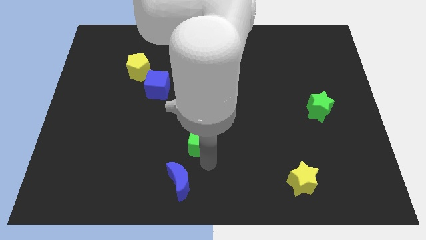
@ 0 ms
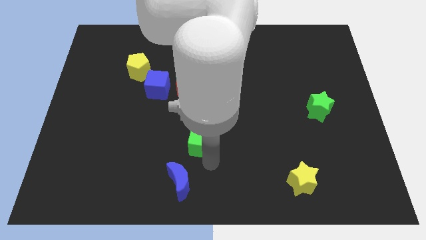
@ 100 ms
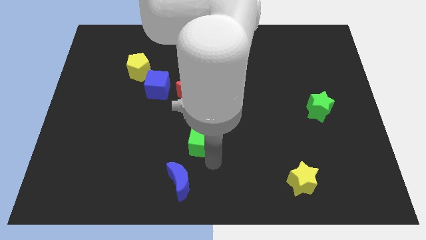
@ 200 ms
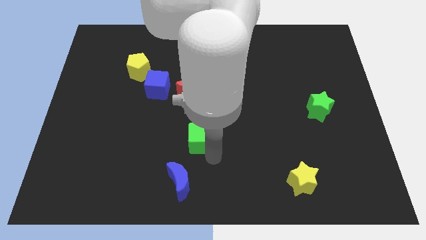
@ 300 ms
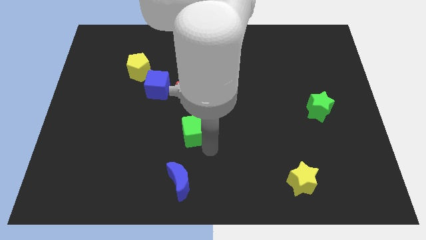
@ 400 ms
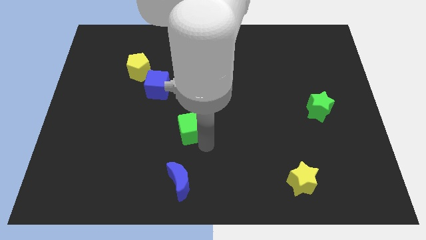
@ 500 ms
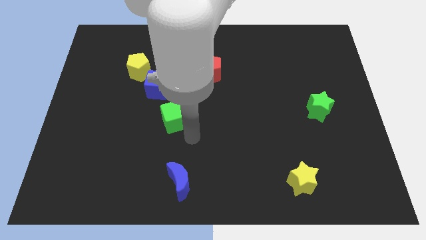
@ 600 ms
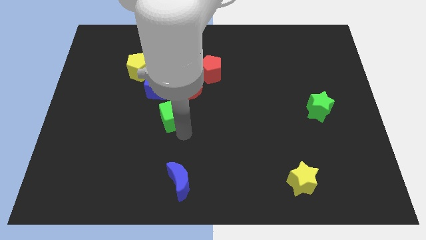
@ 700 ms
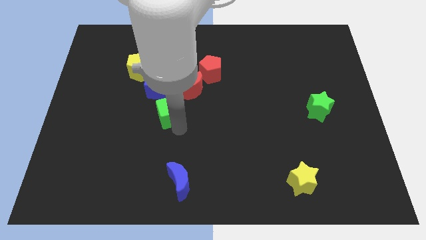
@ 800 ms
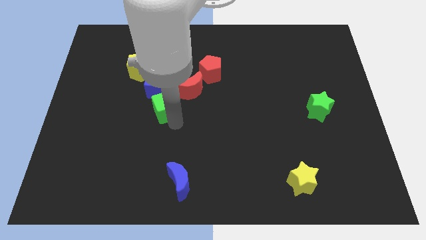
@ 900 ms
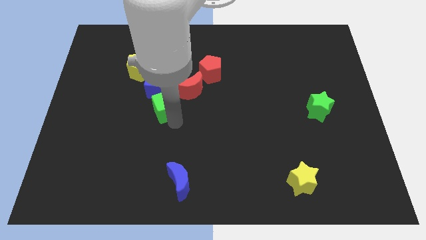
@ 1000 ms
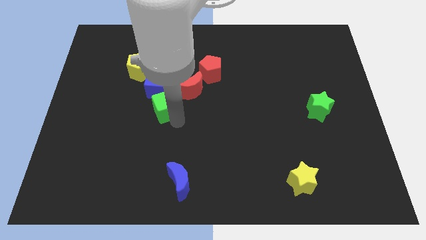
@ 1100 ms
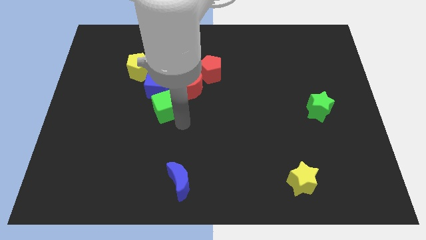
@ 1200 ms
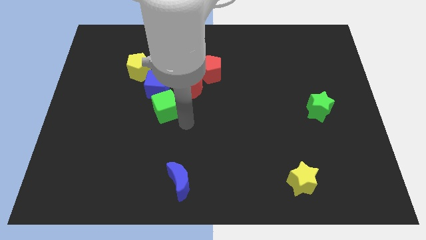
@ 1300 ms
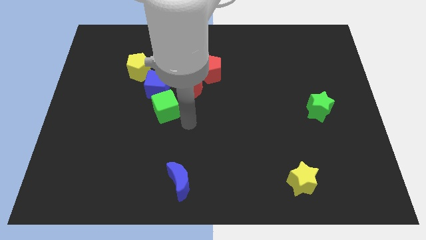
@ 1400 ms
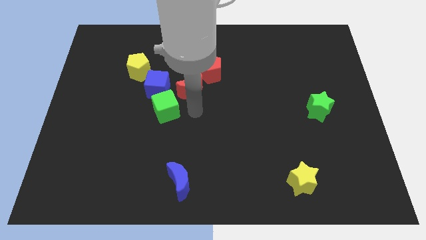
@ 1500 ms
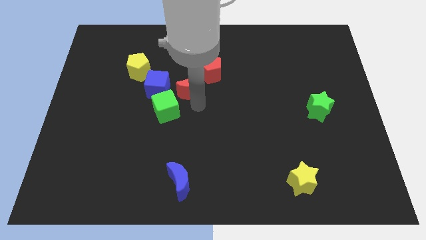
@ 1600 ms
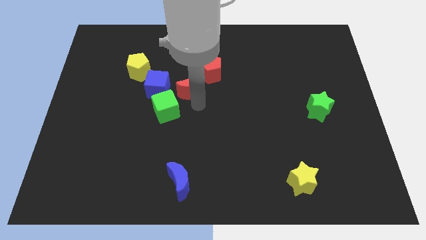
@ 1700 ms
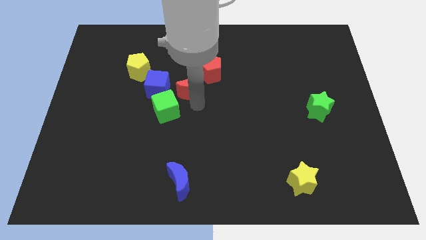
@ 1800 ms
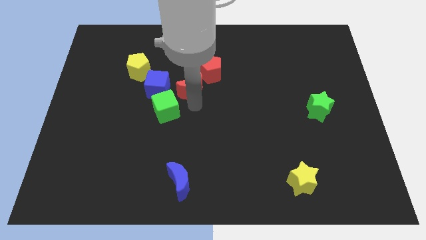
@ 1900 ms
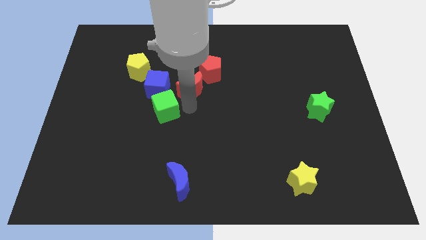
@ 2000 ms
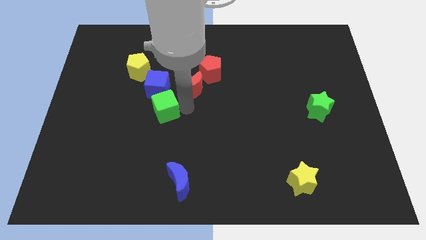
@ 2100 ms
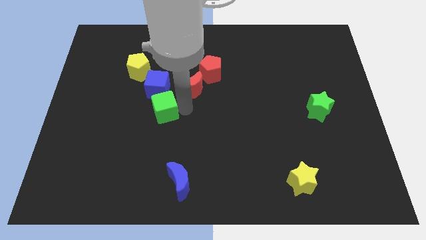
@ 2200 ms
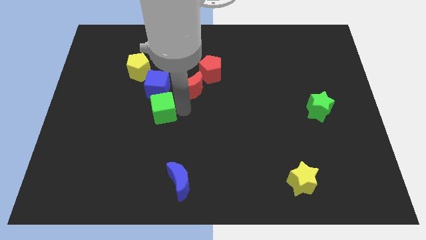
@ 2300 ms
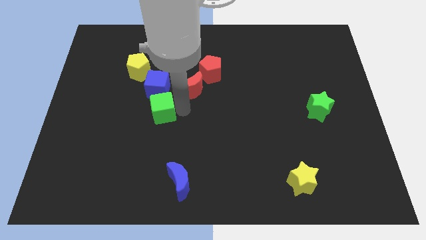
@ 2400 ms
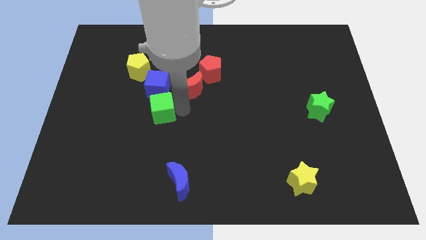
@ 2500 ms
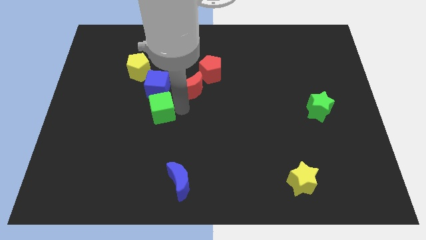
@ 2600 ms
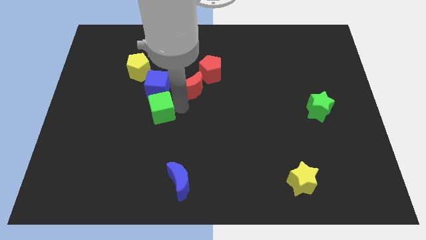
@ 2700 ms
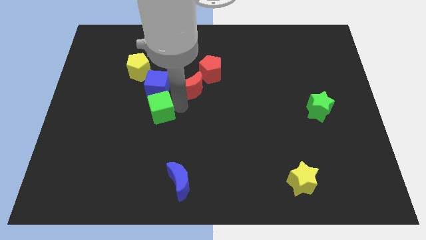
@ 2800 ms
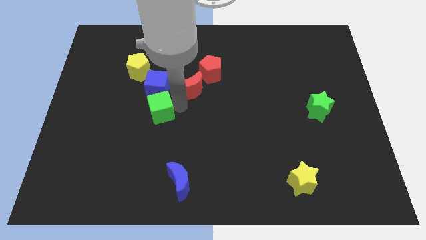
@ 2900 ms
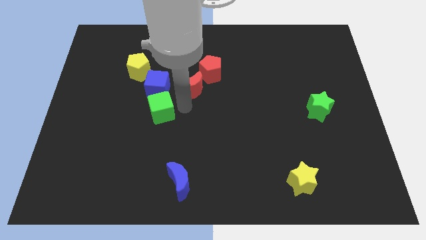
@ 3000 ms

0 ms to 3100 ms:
push the green cube into the blue cube

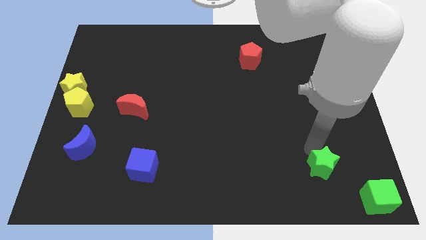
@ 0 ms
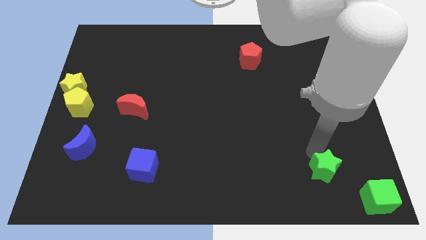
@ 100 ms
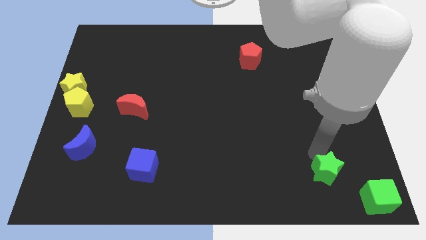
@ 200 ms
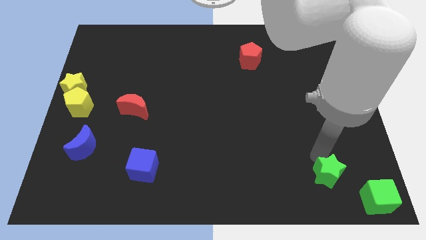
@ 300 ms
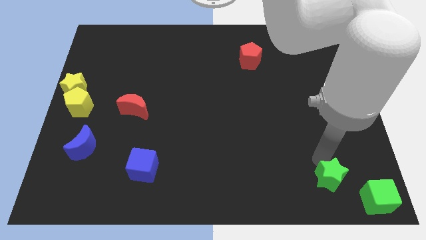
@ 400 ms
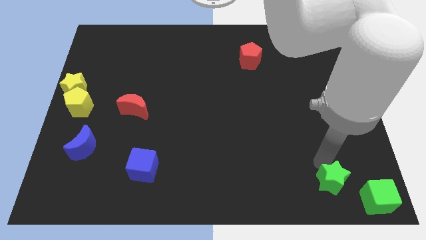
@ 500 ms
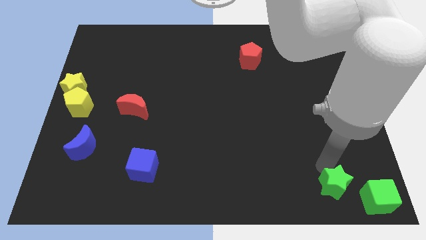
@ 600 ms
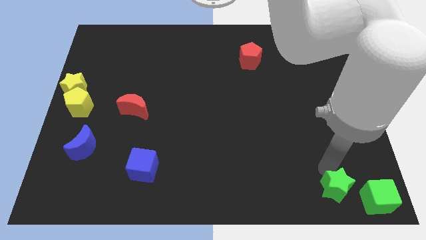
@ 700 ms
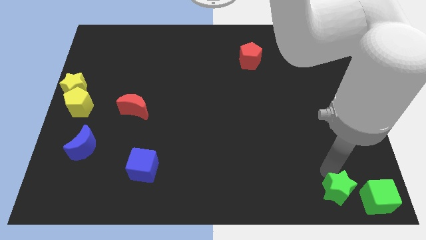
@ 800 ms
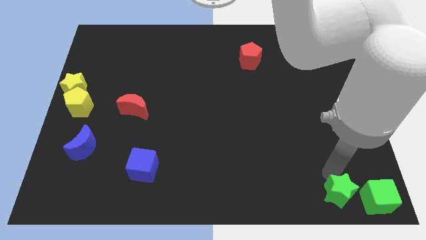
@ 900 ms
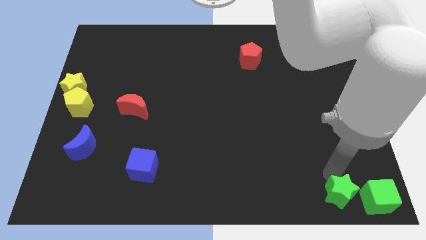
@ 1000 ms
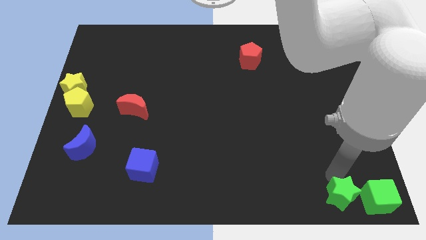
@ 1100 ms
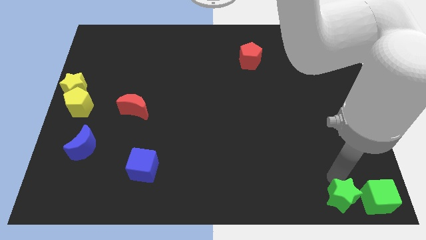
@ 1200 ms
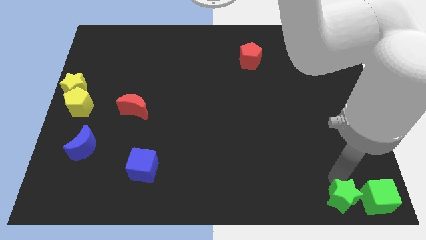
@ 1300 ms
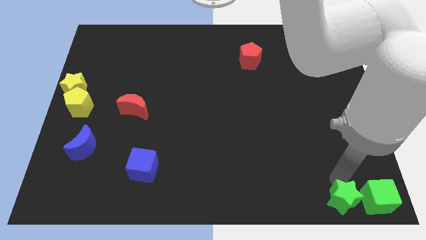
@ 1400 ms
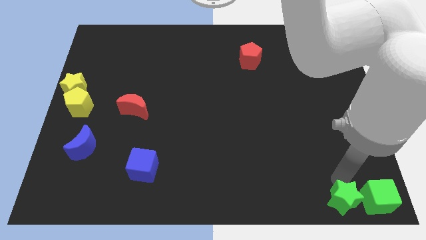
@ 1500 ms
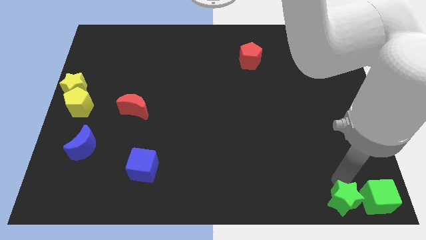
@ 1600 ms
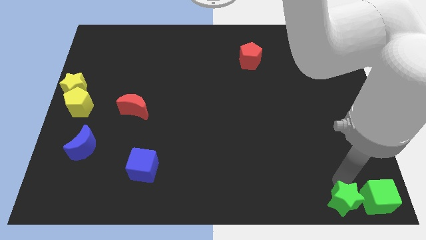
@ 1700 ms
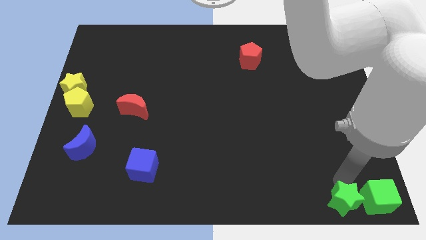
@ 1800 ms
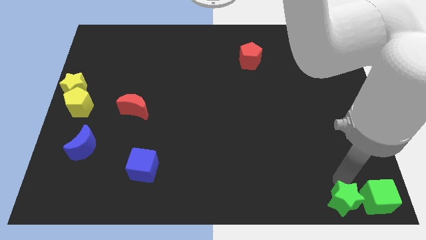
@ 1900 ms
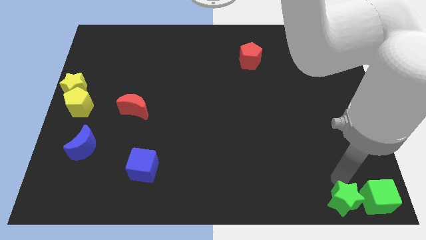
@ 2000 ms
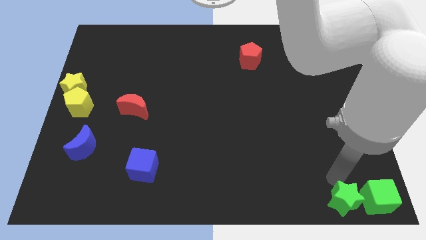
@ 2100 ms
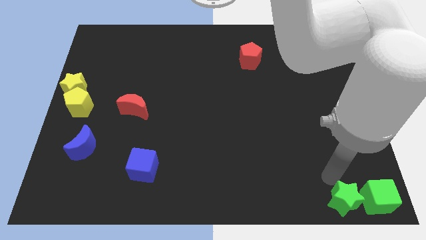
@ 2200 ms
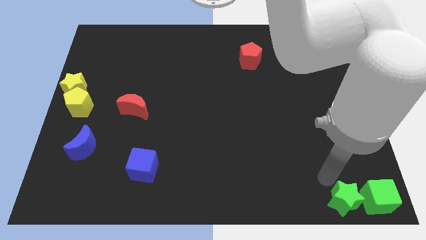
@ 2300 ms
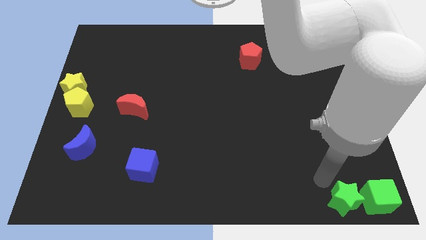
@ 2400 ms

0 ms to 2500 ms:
place the green star to the left of the green cube

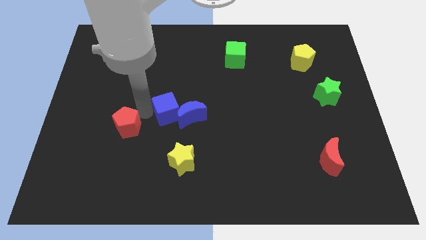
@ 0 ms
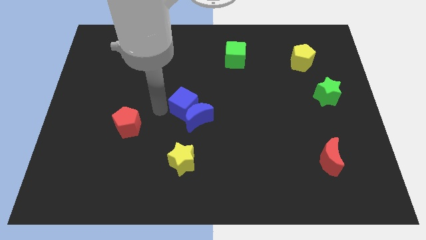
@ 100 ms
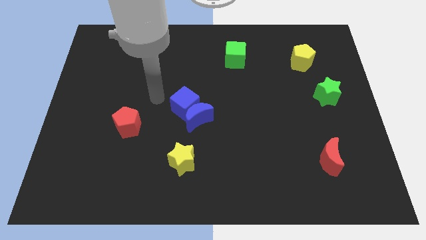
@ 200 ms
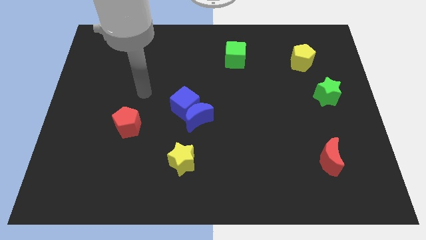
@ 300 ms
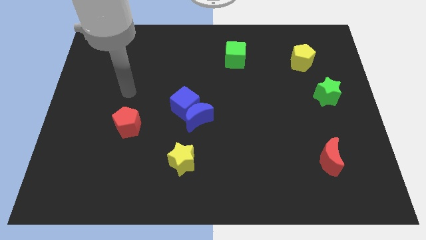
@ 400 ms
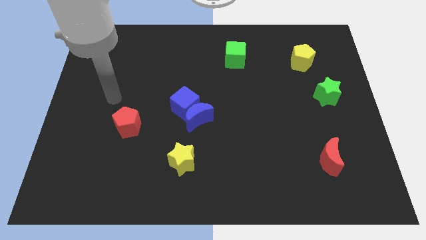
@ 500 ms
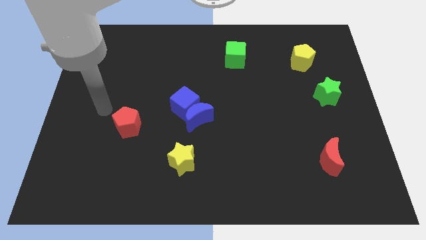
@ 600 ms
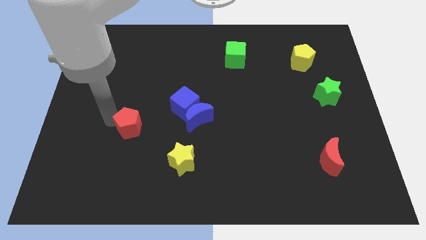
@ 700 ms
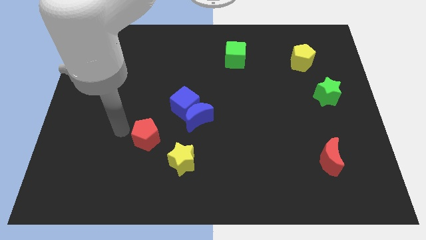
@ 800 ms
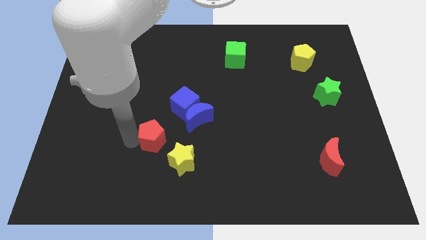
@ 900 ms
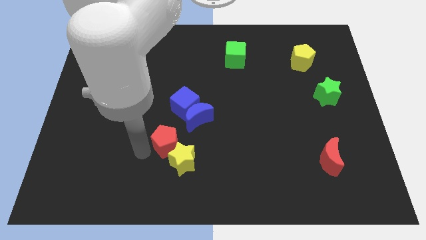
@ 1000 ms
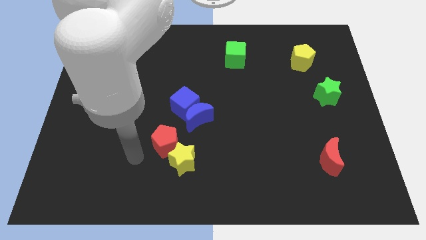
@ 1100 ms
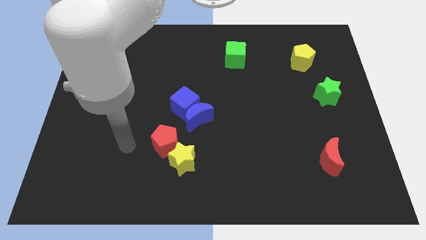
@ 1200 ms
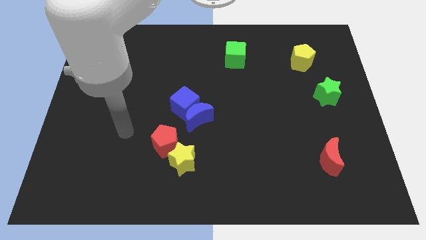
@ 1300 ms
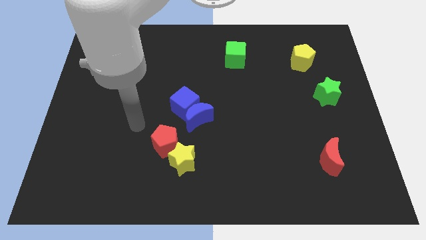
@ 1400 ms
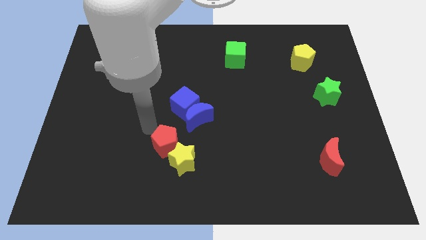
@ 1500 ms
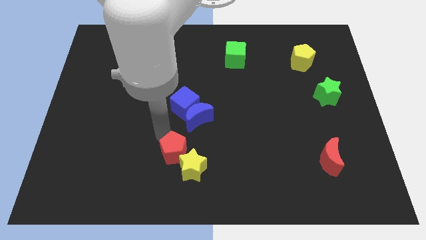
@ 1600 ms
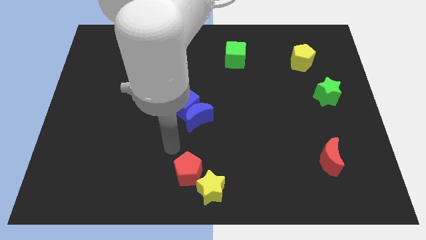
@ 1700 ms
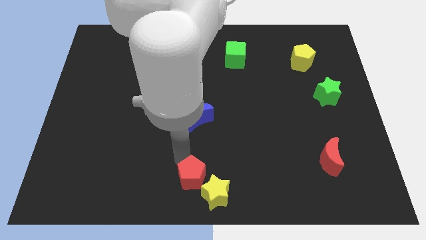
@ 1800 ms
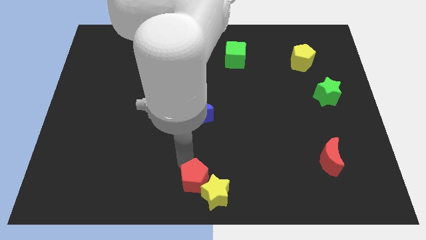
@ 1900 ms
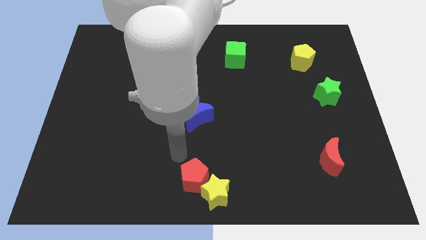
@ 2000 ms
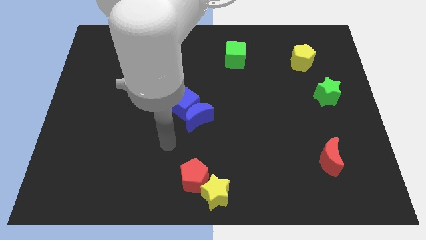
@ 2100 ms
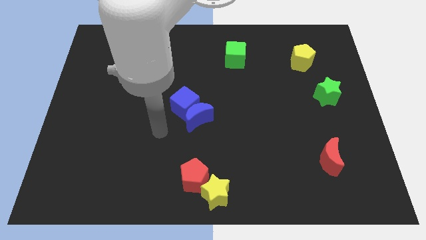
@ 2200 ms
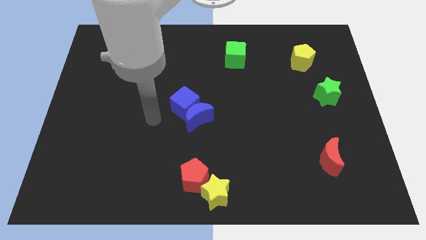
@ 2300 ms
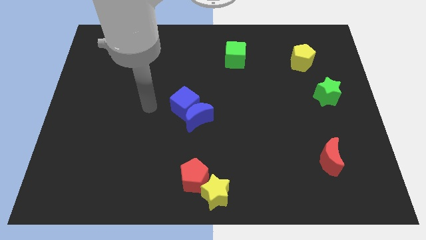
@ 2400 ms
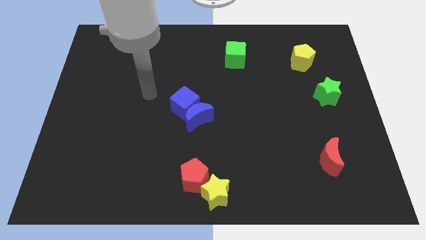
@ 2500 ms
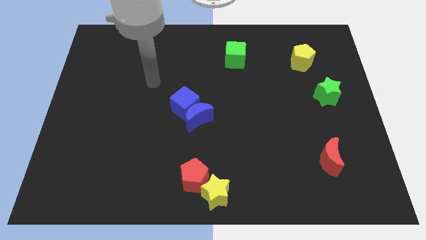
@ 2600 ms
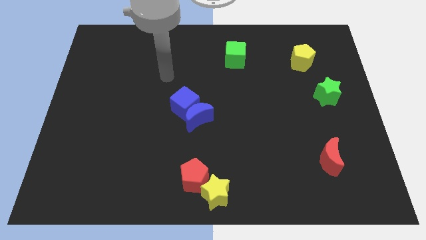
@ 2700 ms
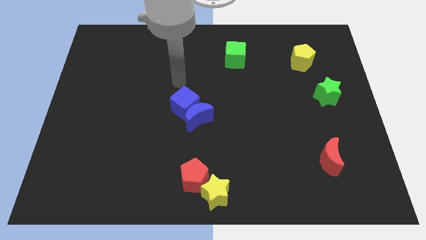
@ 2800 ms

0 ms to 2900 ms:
push the yellow star and red pentagon towards the bottom center

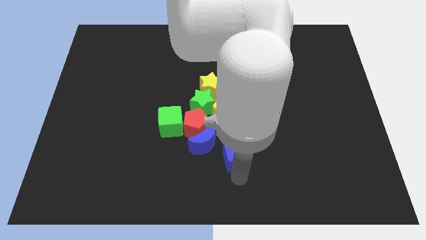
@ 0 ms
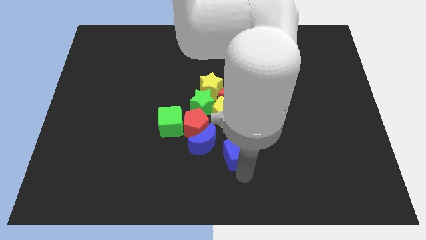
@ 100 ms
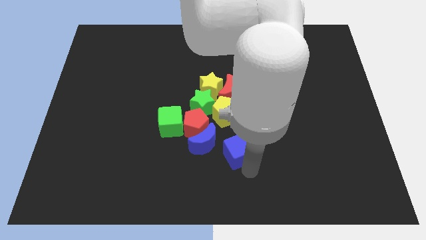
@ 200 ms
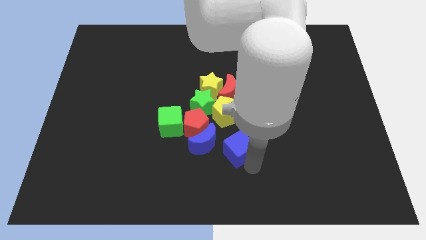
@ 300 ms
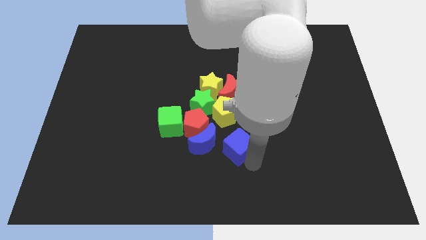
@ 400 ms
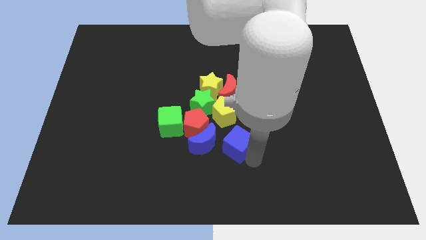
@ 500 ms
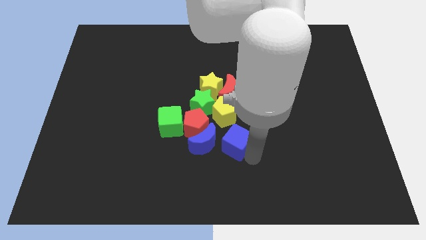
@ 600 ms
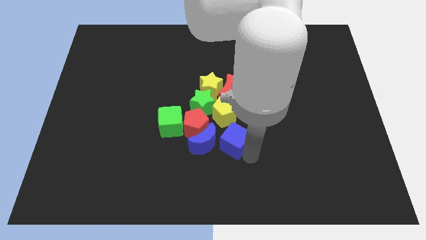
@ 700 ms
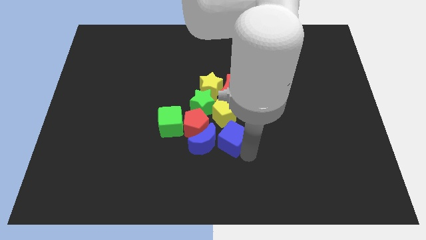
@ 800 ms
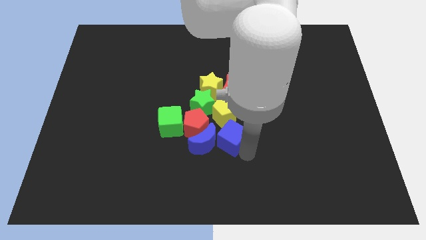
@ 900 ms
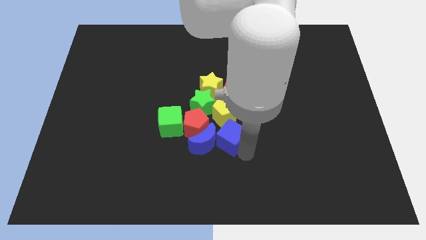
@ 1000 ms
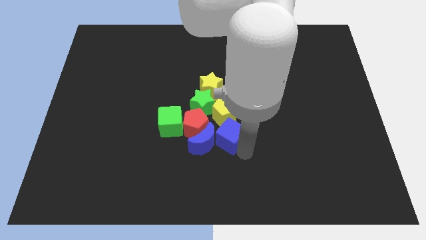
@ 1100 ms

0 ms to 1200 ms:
push the blue cube towards the center of the board
